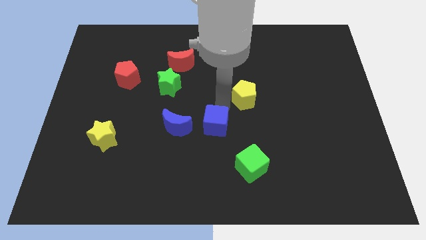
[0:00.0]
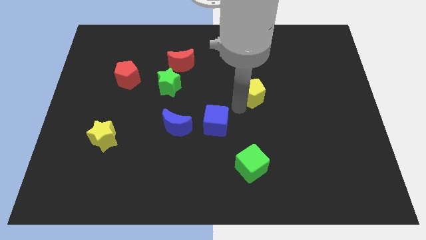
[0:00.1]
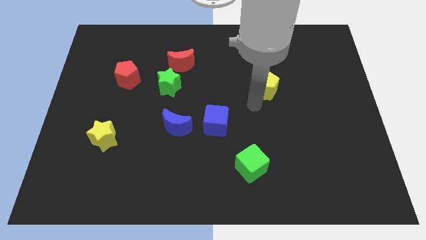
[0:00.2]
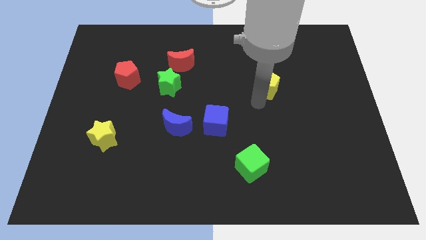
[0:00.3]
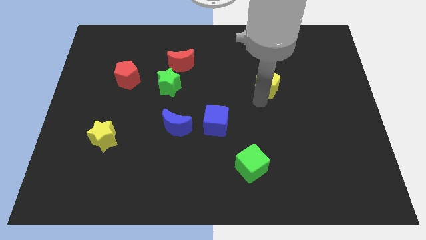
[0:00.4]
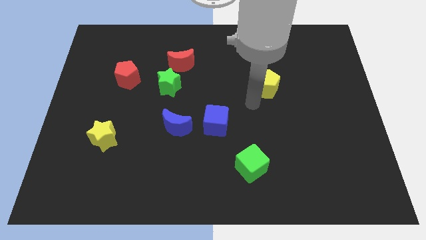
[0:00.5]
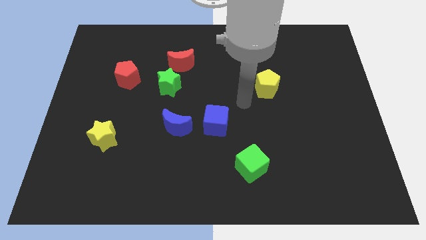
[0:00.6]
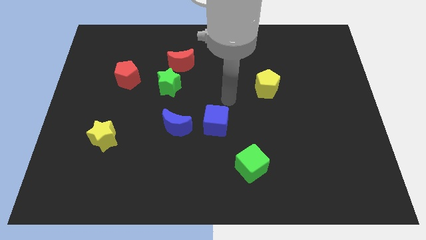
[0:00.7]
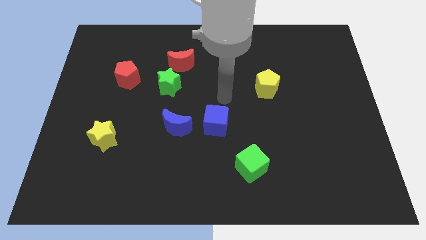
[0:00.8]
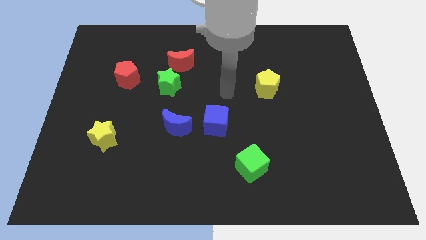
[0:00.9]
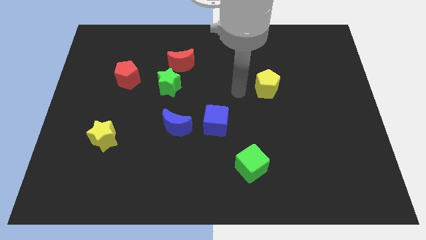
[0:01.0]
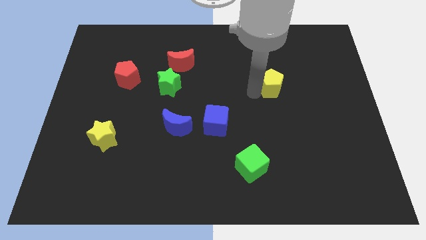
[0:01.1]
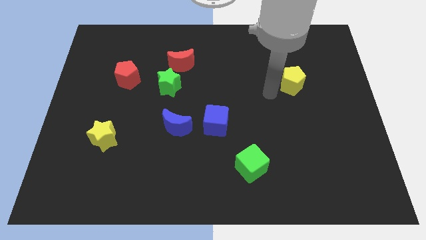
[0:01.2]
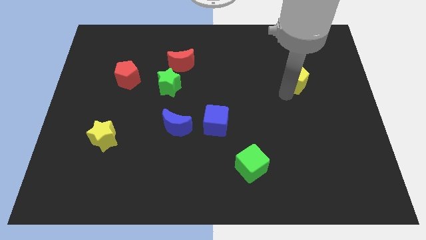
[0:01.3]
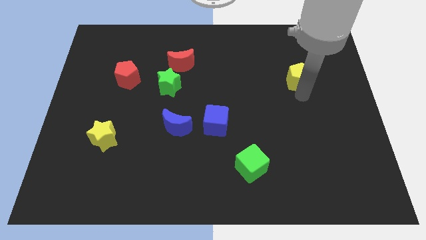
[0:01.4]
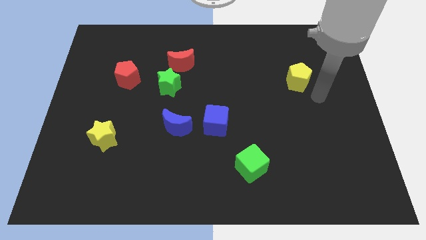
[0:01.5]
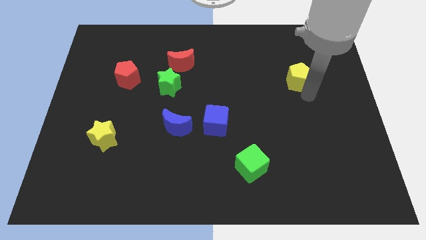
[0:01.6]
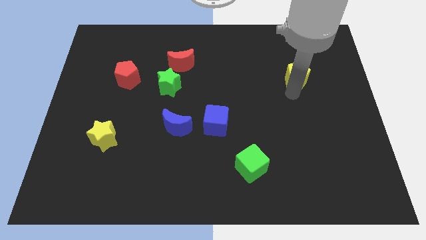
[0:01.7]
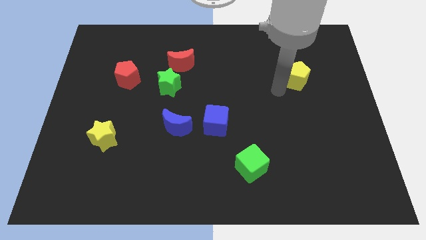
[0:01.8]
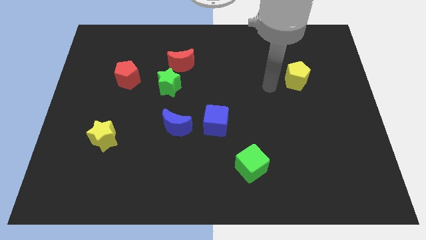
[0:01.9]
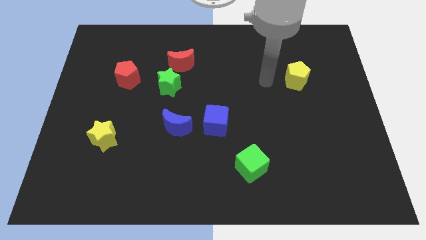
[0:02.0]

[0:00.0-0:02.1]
separate yellow pentagon from blue cube

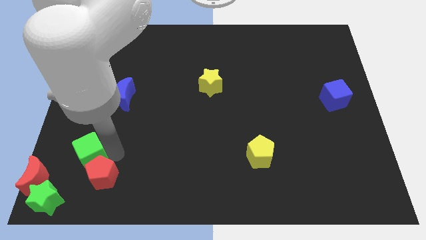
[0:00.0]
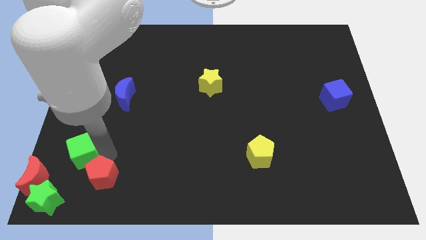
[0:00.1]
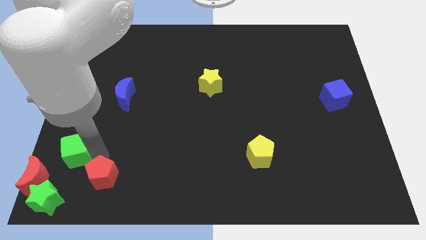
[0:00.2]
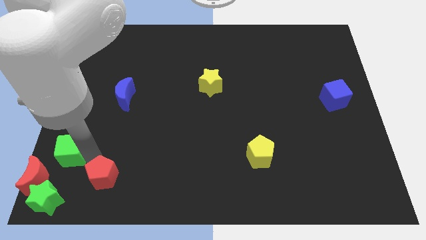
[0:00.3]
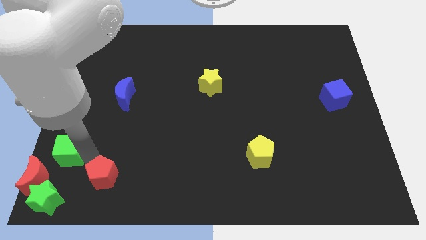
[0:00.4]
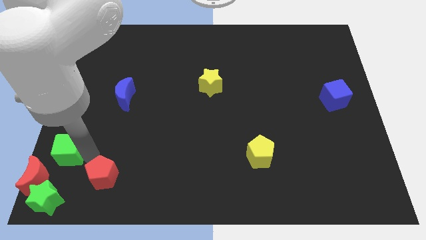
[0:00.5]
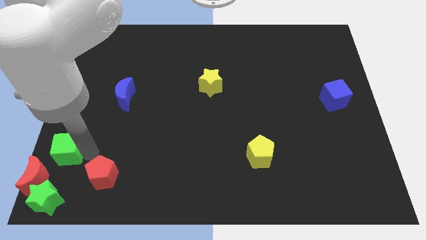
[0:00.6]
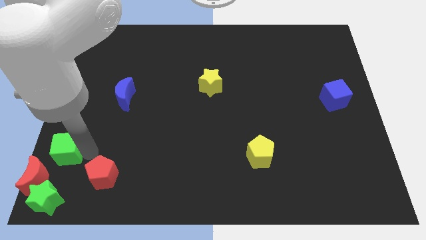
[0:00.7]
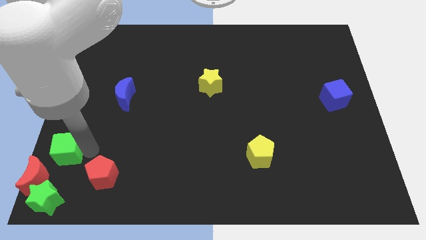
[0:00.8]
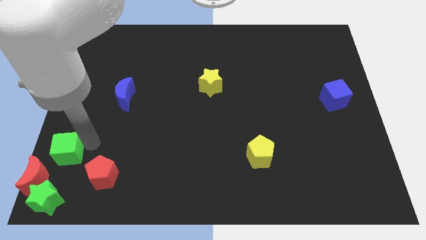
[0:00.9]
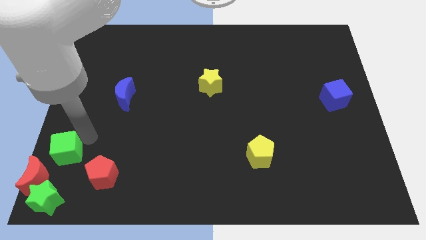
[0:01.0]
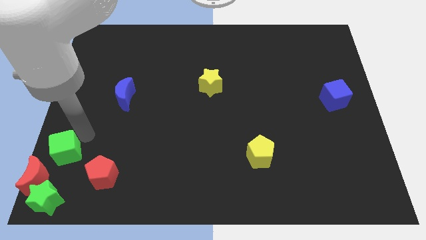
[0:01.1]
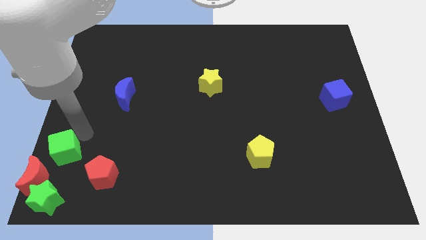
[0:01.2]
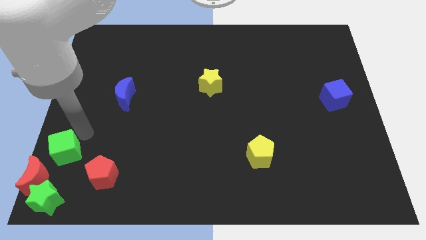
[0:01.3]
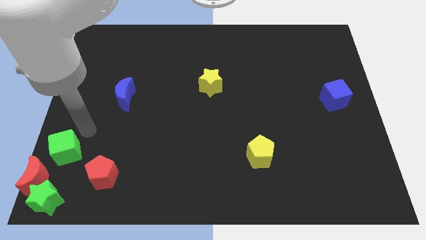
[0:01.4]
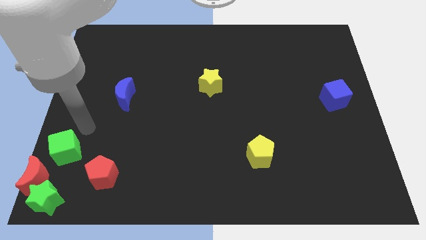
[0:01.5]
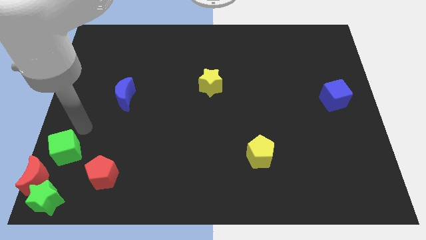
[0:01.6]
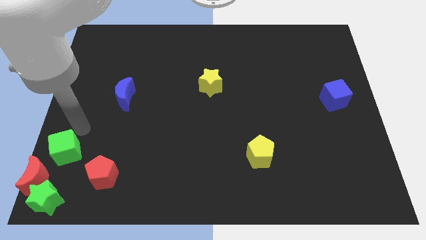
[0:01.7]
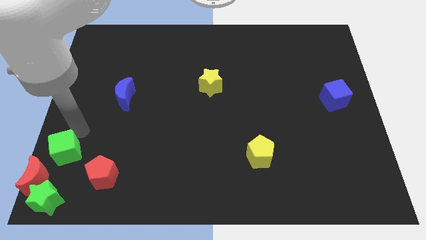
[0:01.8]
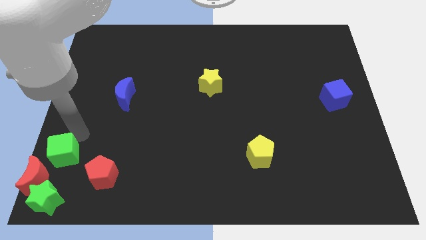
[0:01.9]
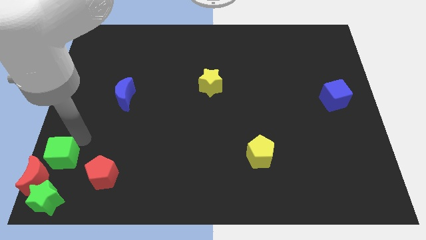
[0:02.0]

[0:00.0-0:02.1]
separate green cube from red pentagon

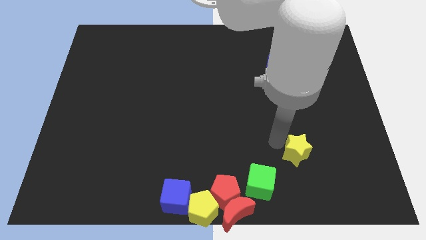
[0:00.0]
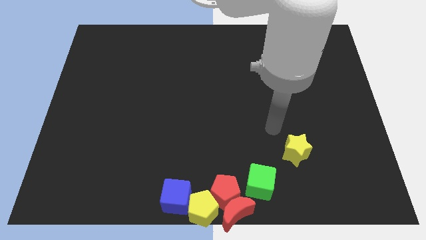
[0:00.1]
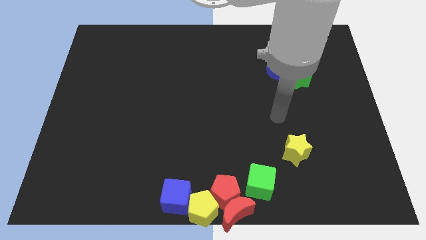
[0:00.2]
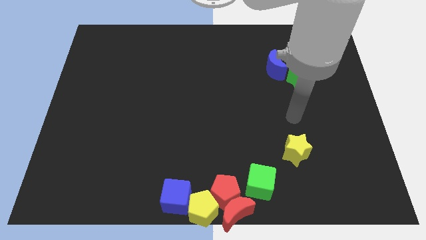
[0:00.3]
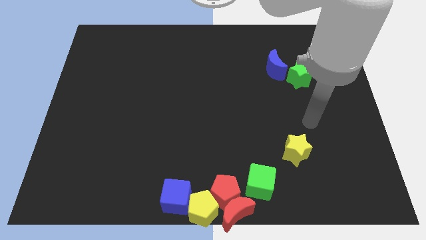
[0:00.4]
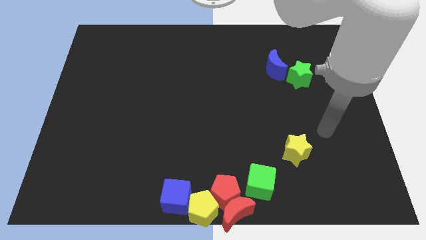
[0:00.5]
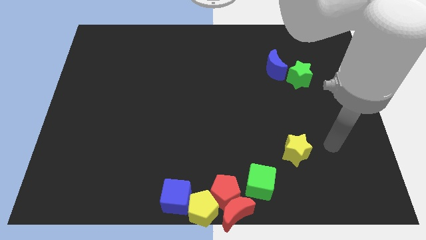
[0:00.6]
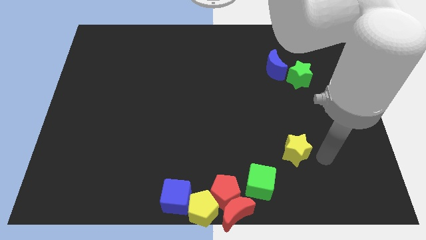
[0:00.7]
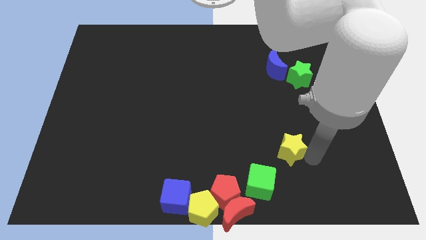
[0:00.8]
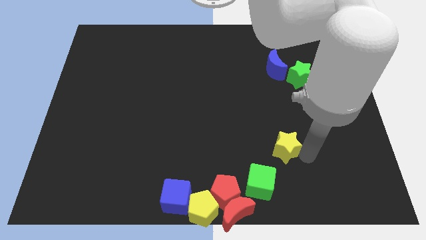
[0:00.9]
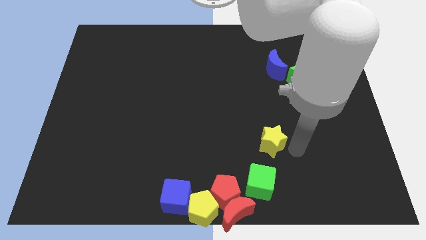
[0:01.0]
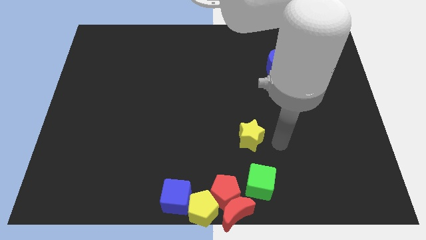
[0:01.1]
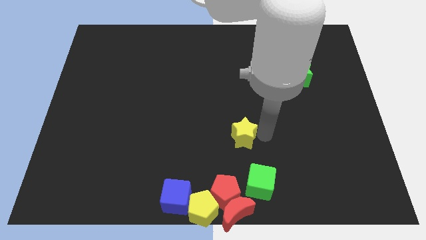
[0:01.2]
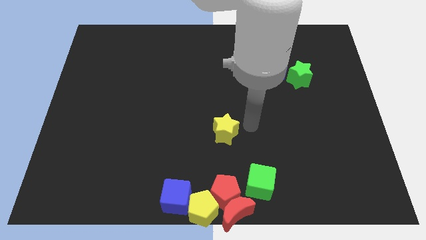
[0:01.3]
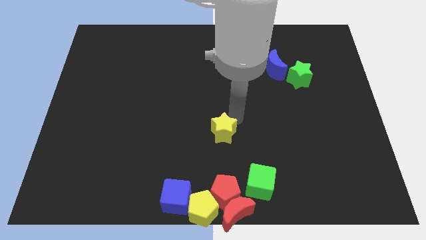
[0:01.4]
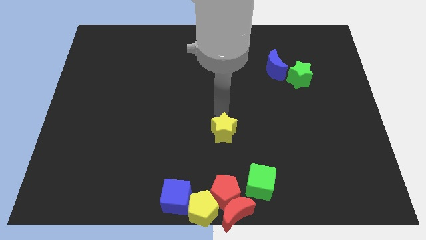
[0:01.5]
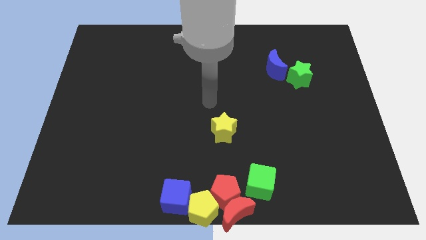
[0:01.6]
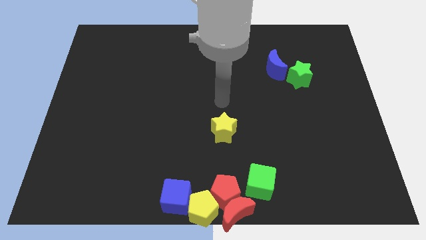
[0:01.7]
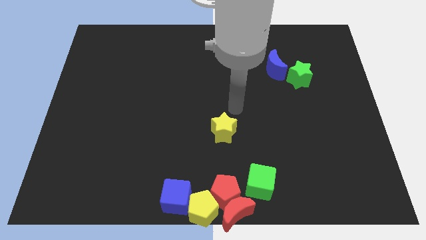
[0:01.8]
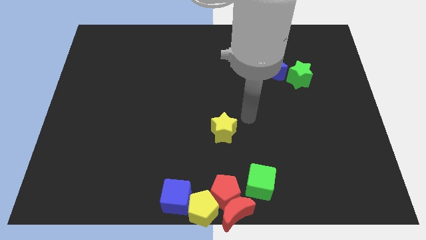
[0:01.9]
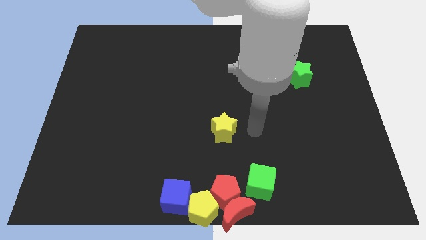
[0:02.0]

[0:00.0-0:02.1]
push yellow star vertical to red pentagon

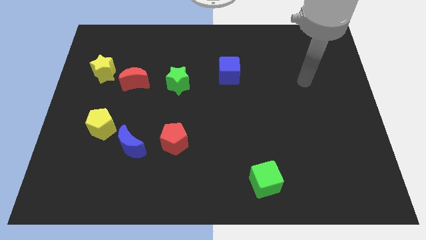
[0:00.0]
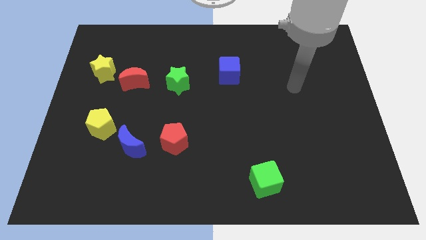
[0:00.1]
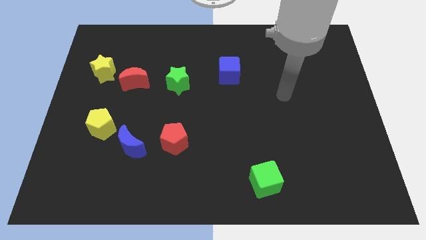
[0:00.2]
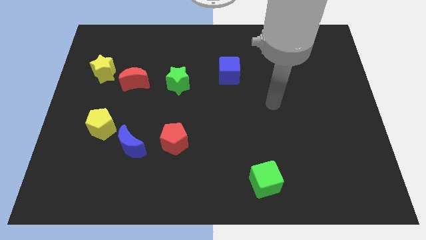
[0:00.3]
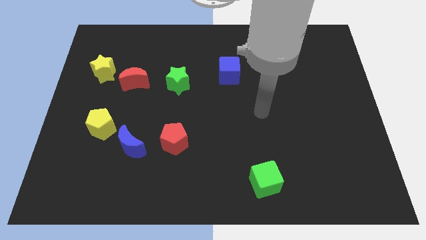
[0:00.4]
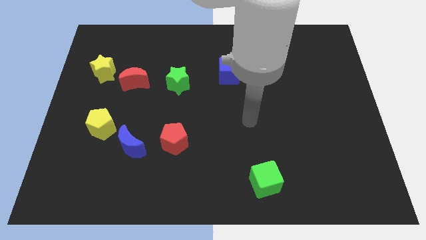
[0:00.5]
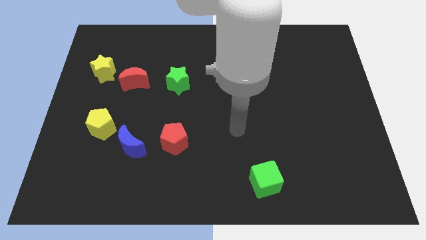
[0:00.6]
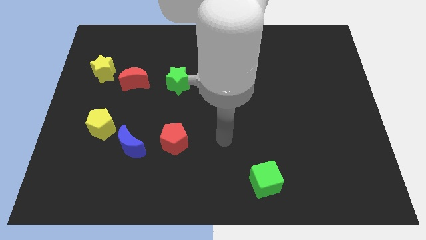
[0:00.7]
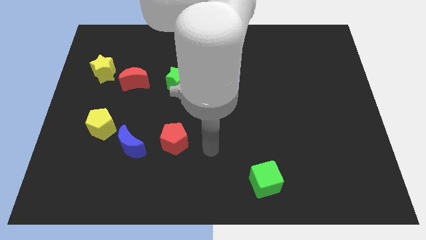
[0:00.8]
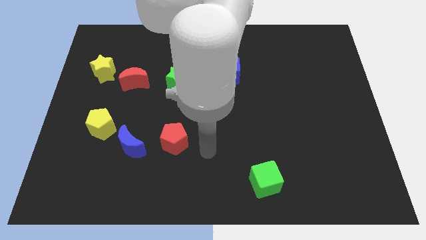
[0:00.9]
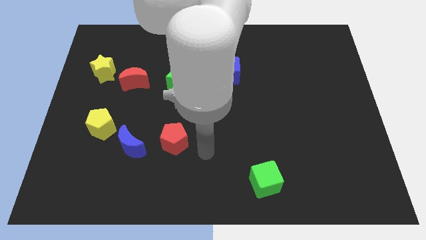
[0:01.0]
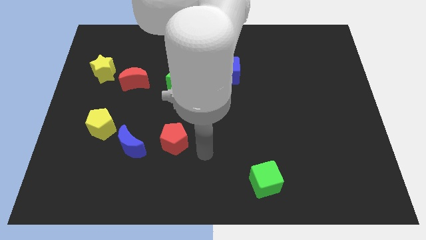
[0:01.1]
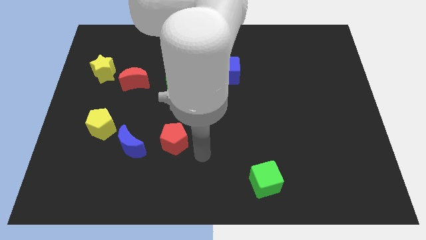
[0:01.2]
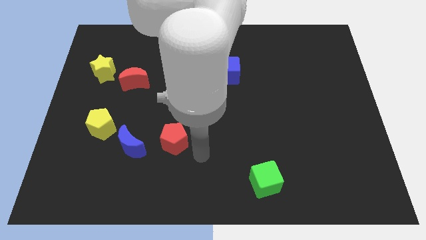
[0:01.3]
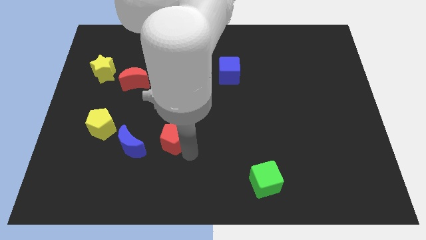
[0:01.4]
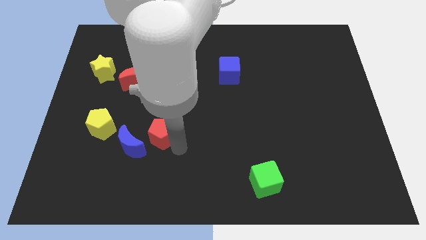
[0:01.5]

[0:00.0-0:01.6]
go near the red pentagon

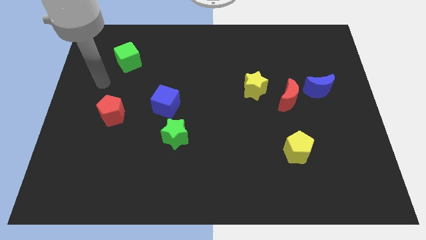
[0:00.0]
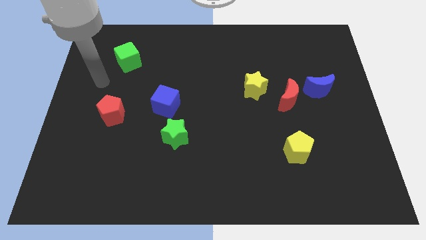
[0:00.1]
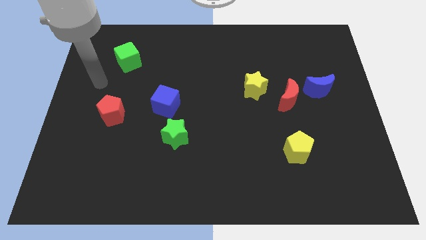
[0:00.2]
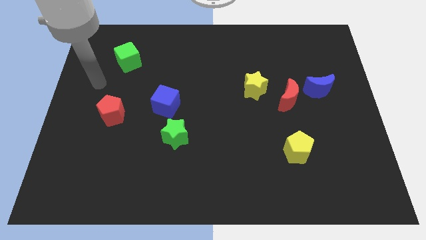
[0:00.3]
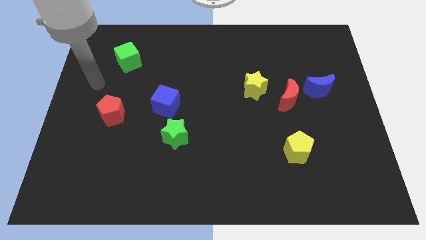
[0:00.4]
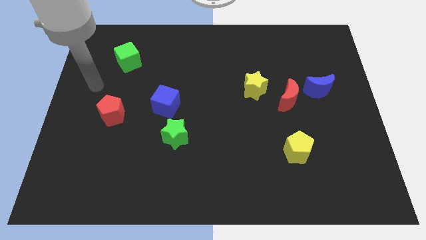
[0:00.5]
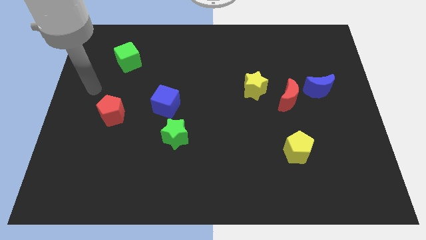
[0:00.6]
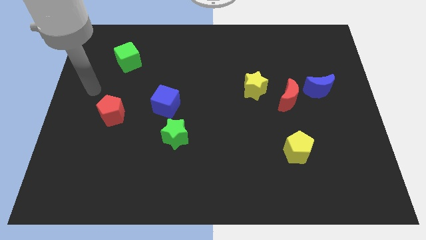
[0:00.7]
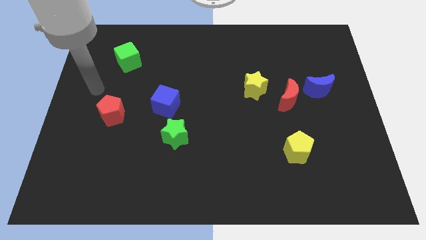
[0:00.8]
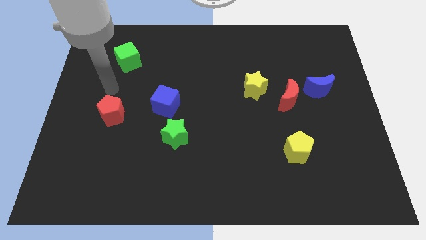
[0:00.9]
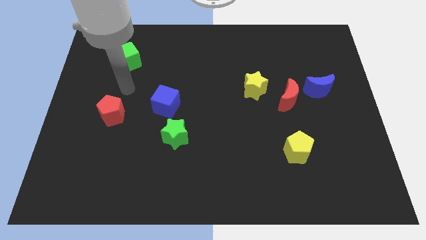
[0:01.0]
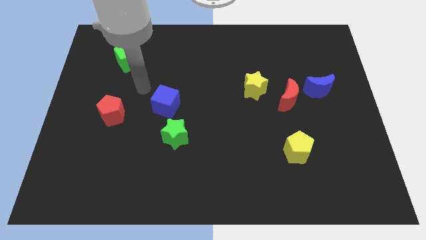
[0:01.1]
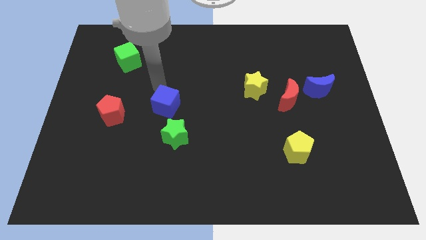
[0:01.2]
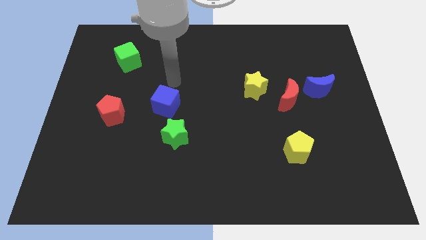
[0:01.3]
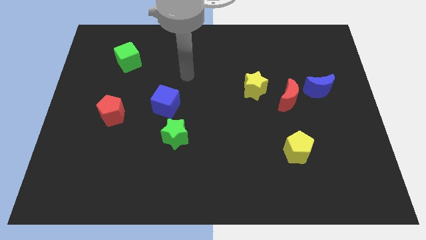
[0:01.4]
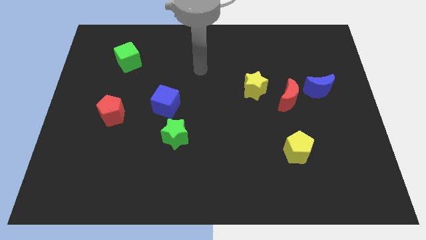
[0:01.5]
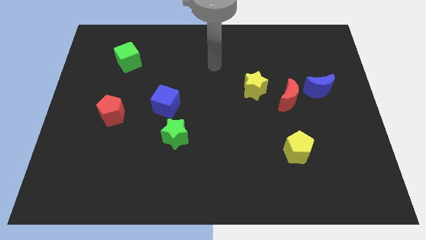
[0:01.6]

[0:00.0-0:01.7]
move your arm diagonally on the top right side of the blue cube
